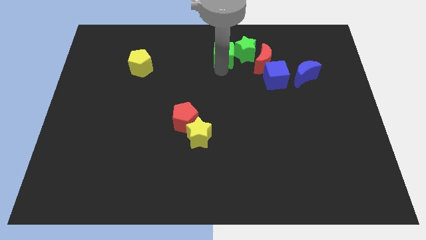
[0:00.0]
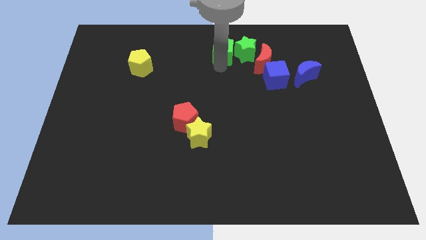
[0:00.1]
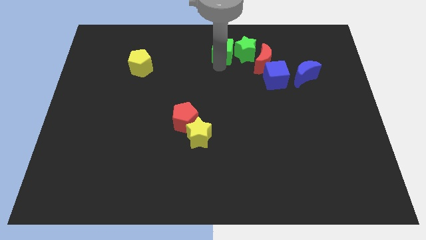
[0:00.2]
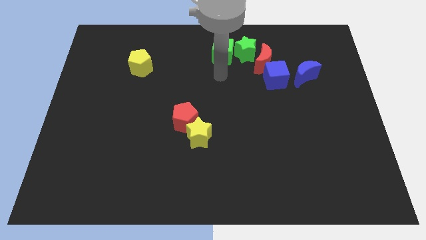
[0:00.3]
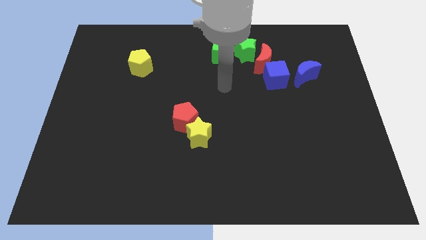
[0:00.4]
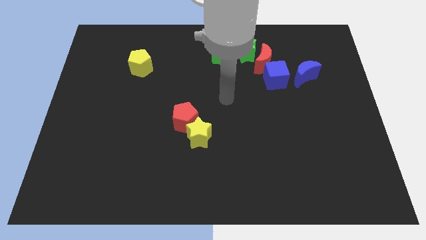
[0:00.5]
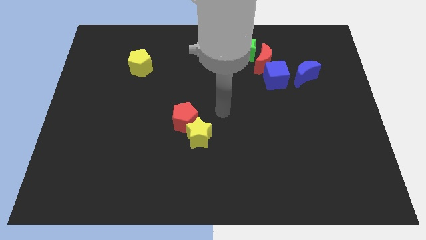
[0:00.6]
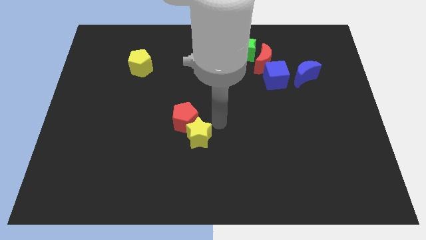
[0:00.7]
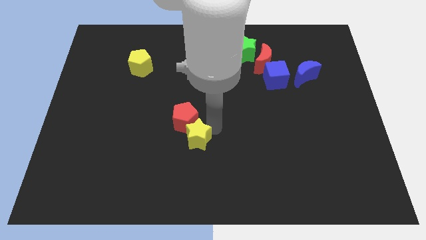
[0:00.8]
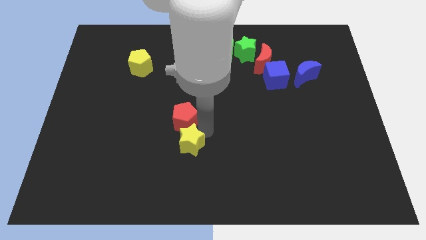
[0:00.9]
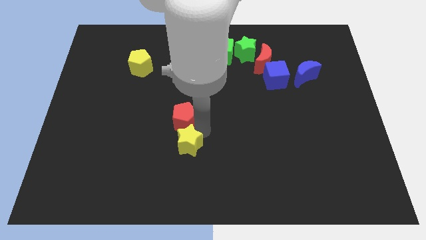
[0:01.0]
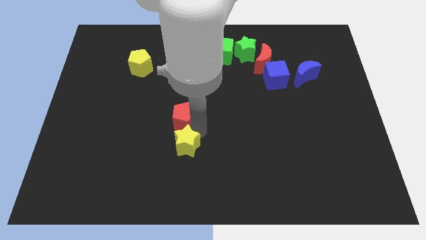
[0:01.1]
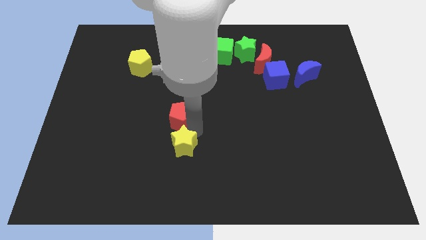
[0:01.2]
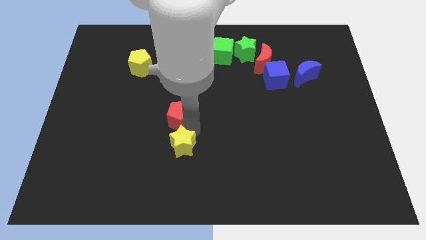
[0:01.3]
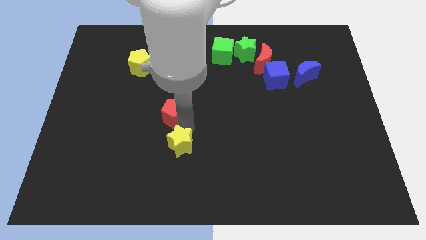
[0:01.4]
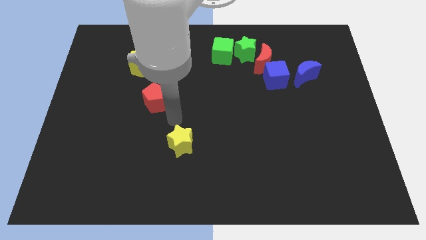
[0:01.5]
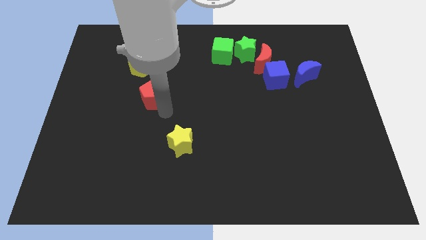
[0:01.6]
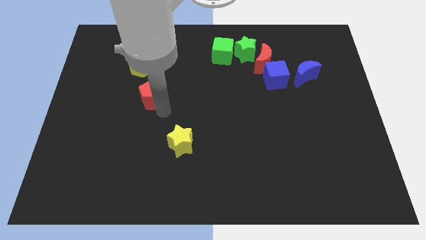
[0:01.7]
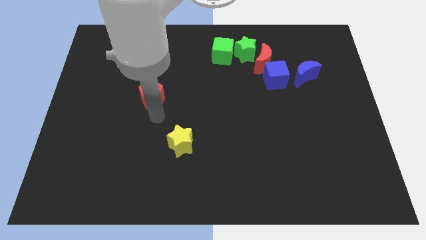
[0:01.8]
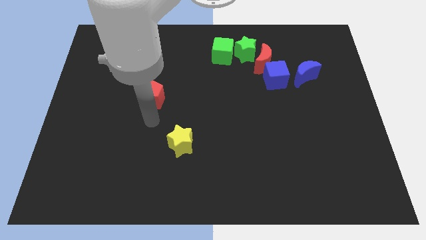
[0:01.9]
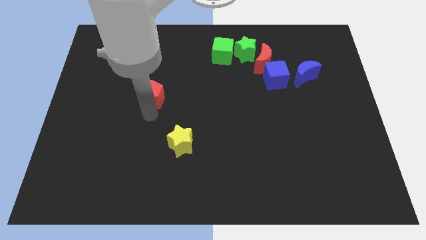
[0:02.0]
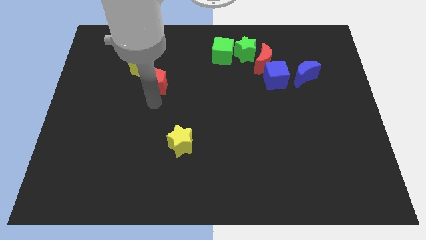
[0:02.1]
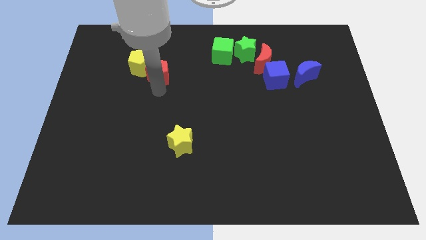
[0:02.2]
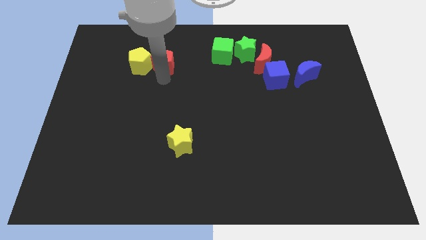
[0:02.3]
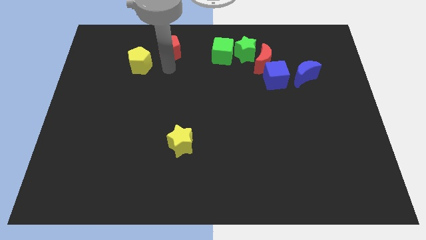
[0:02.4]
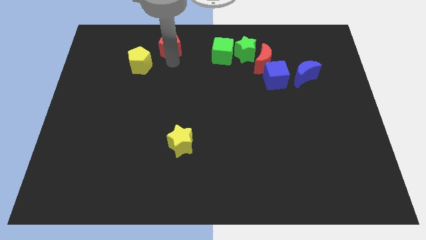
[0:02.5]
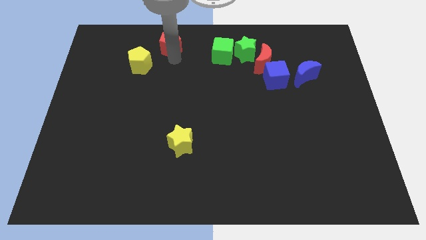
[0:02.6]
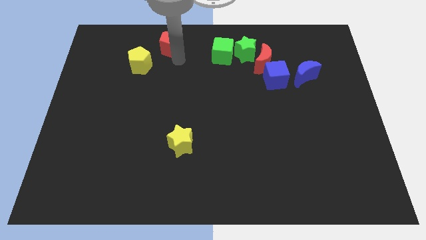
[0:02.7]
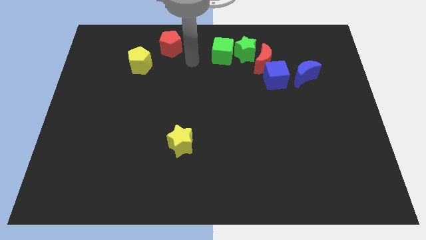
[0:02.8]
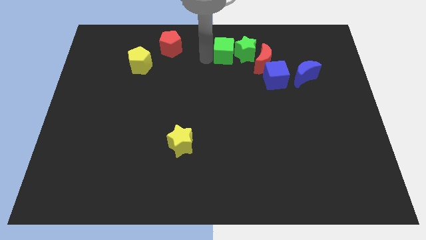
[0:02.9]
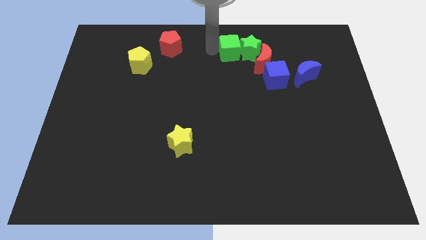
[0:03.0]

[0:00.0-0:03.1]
separate red pentagon and the yellow star

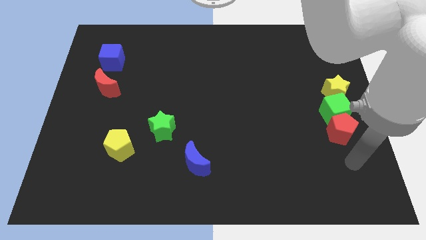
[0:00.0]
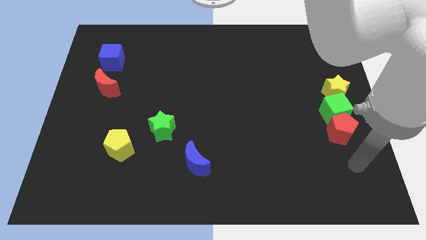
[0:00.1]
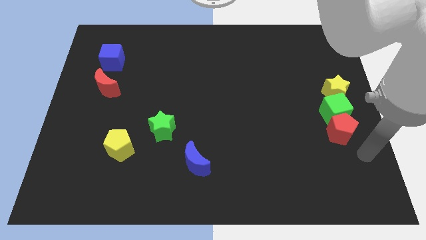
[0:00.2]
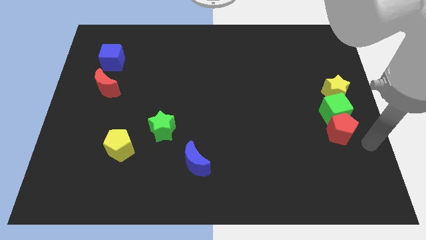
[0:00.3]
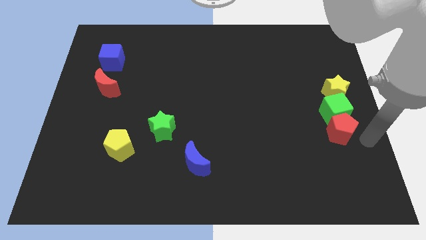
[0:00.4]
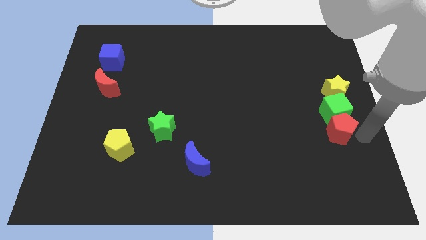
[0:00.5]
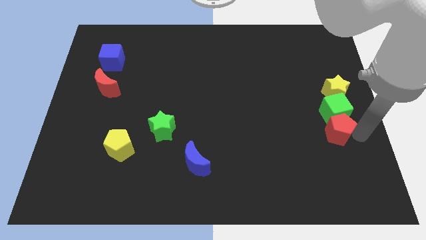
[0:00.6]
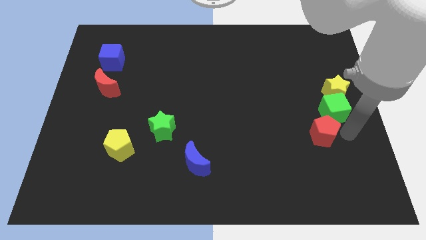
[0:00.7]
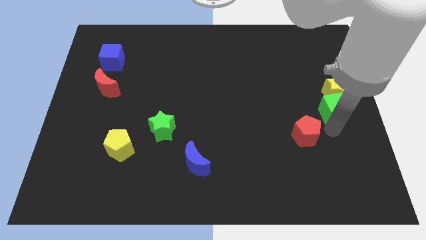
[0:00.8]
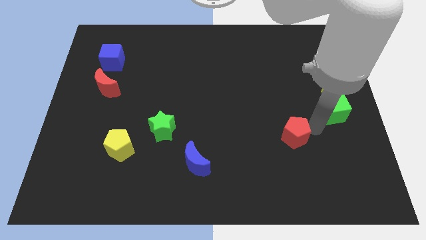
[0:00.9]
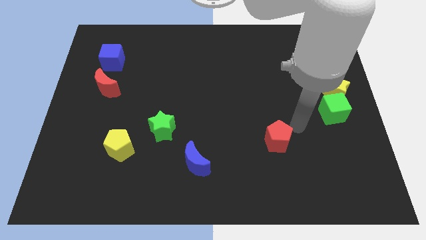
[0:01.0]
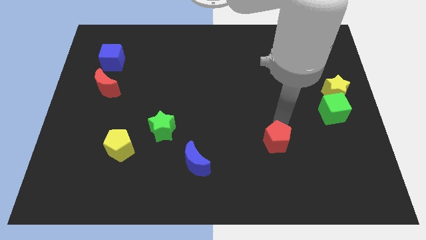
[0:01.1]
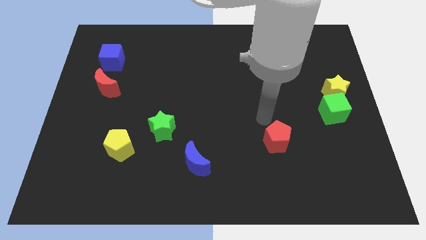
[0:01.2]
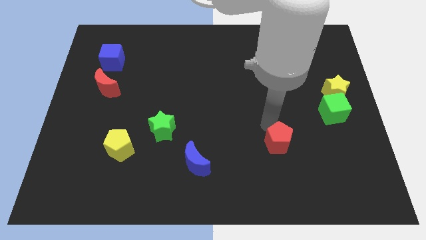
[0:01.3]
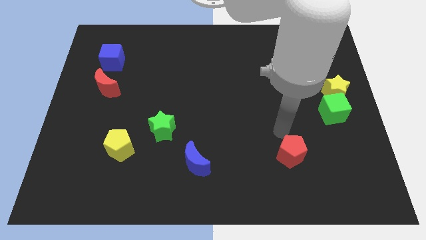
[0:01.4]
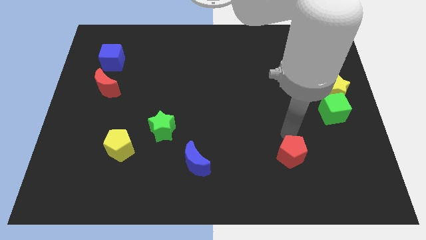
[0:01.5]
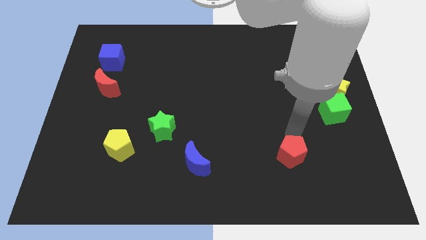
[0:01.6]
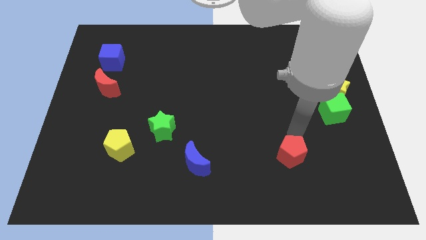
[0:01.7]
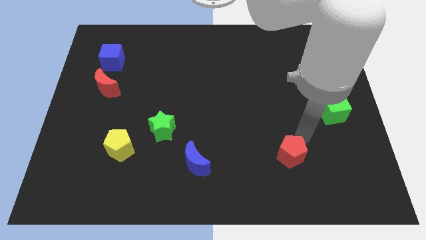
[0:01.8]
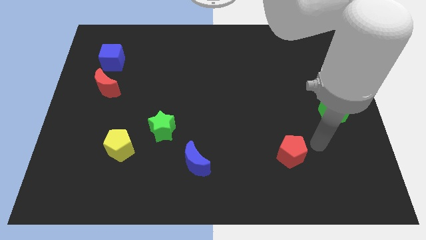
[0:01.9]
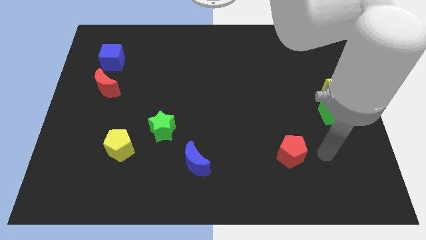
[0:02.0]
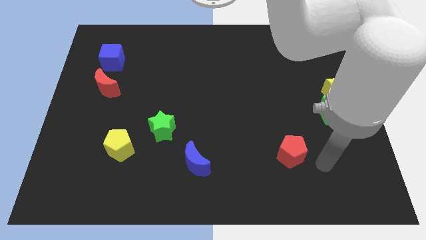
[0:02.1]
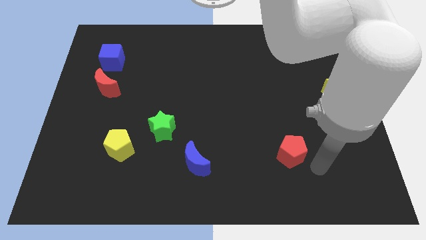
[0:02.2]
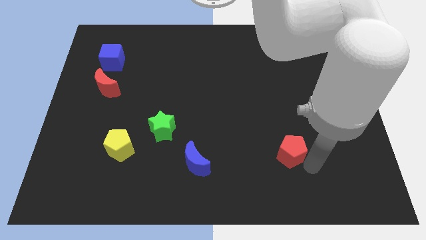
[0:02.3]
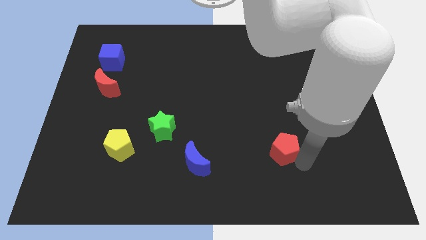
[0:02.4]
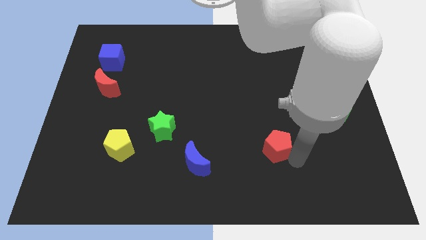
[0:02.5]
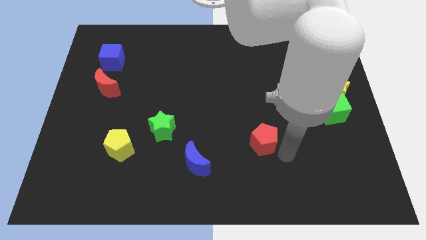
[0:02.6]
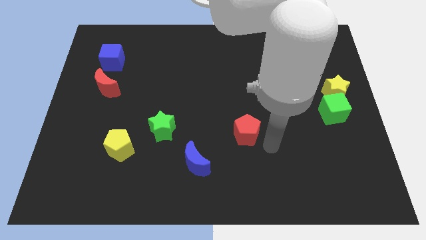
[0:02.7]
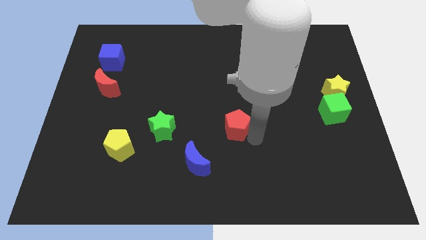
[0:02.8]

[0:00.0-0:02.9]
separate red pentagon from the green cube

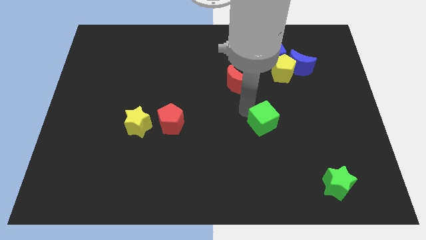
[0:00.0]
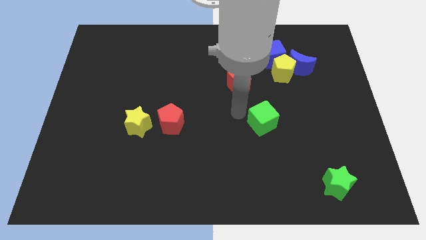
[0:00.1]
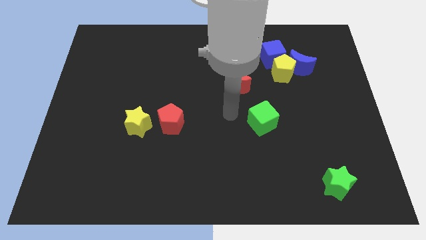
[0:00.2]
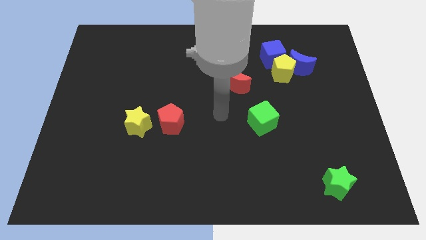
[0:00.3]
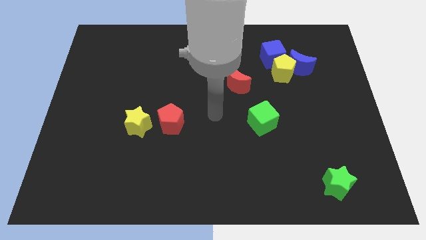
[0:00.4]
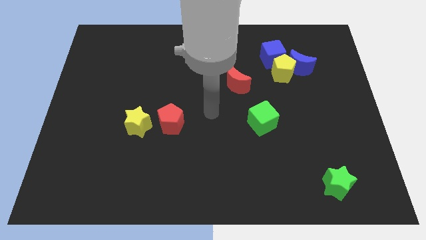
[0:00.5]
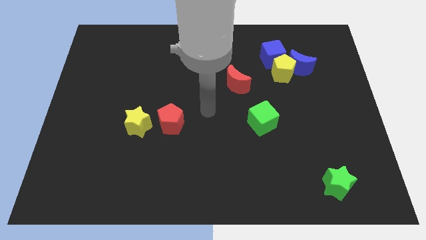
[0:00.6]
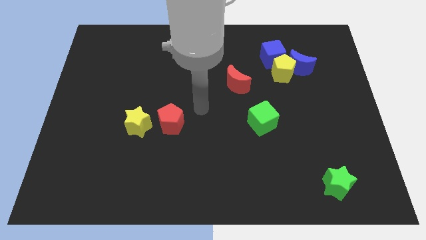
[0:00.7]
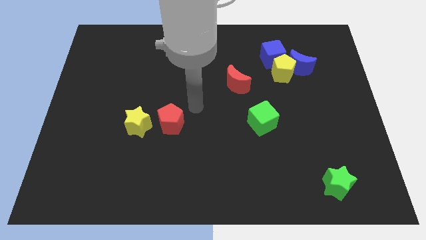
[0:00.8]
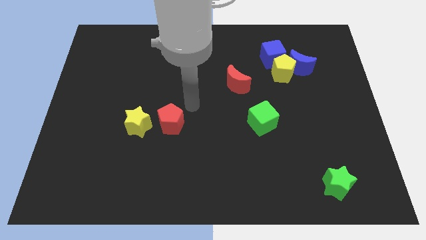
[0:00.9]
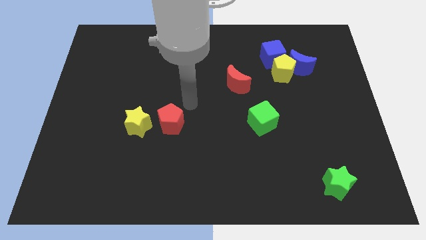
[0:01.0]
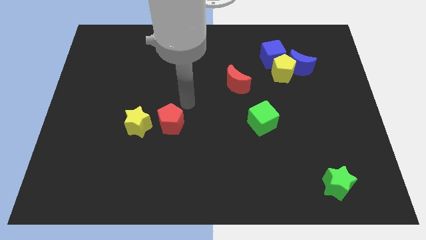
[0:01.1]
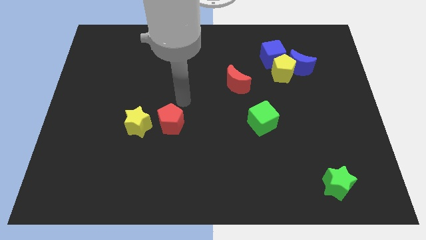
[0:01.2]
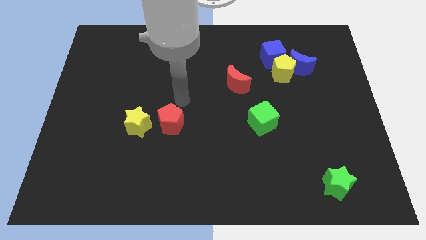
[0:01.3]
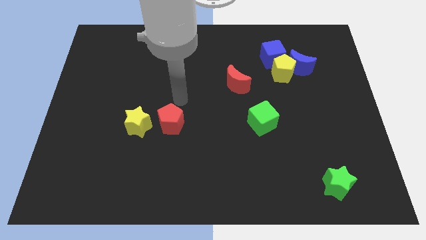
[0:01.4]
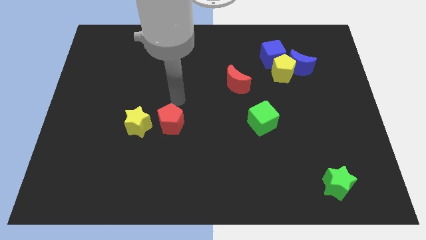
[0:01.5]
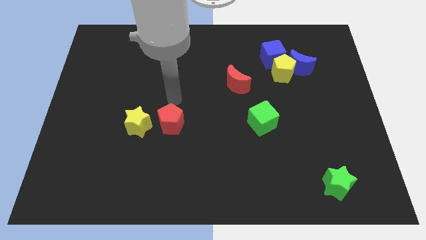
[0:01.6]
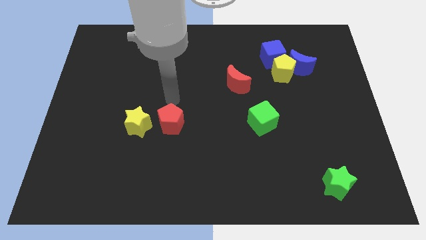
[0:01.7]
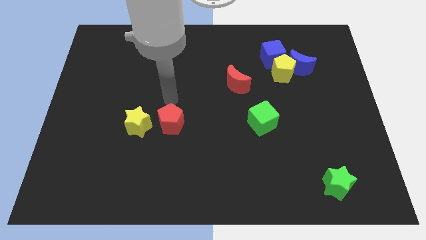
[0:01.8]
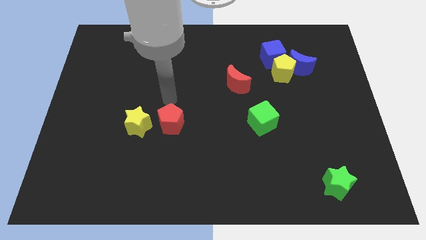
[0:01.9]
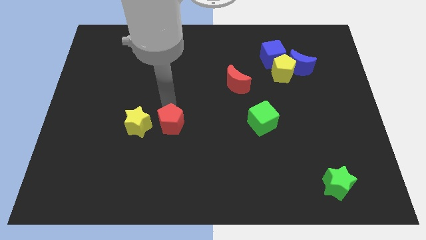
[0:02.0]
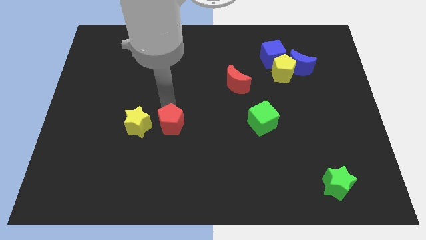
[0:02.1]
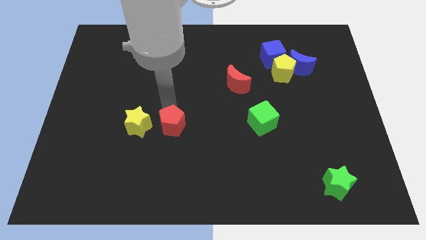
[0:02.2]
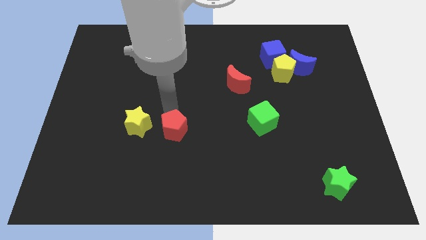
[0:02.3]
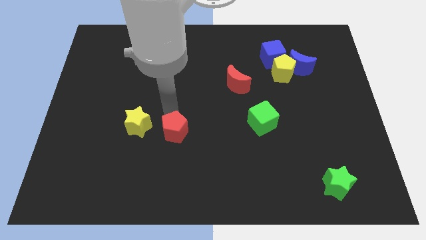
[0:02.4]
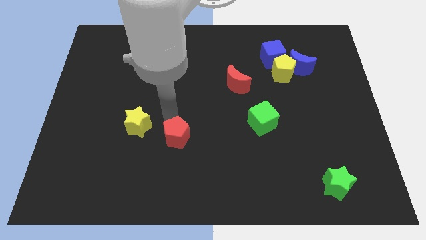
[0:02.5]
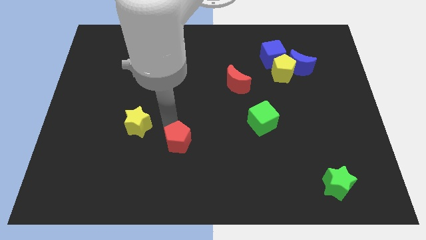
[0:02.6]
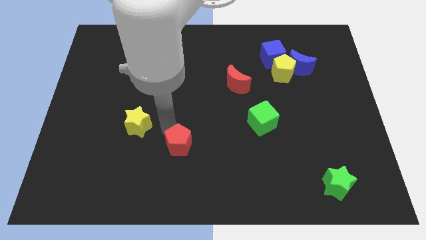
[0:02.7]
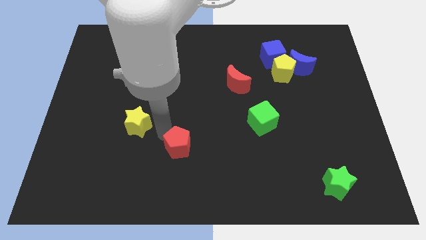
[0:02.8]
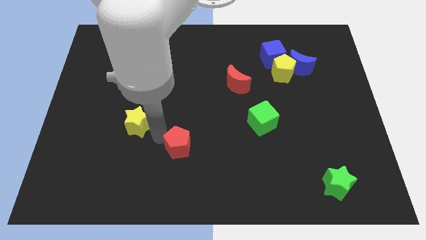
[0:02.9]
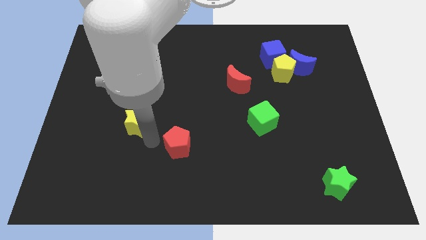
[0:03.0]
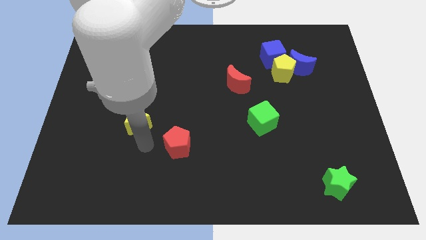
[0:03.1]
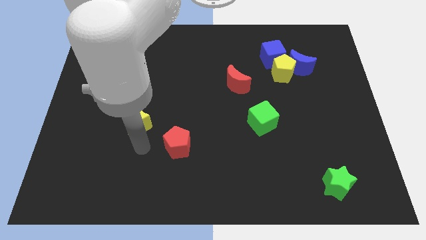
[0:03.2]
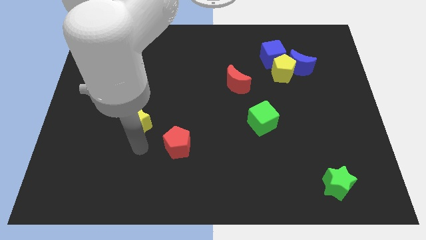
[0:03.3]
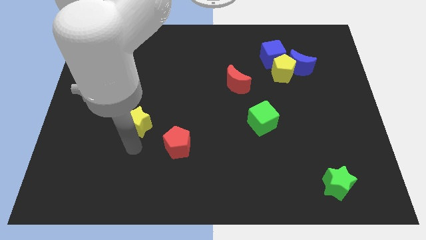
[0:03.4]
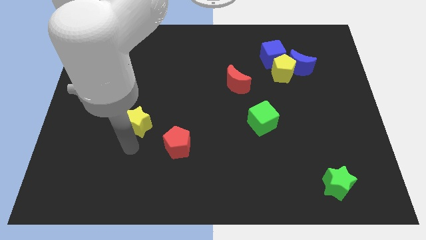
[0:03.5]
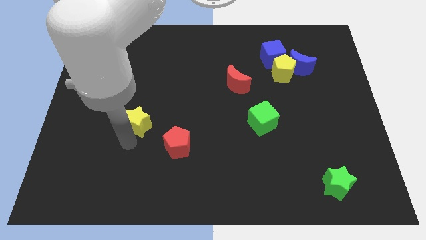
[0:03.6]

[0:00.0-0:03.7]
slide the red pentagon diagonally bottom right to the yellow star
